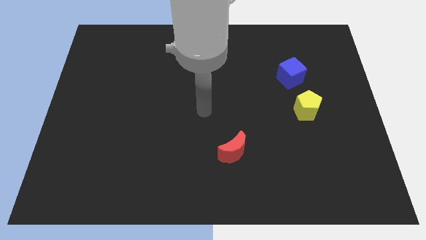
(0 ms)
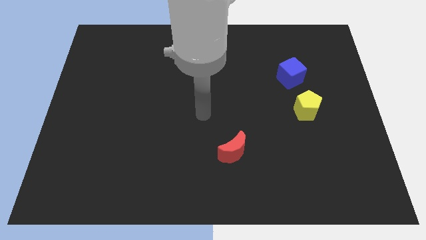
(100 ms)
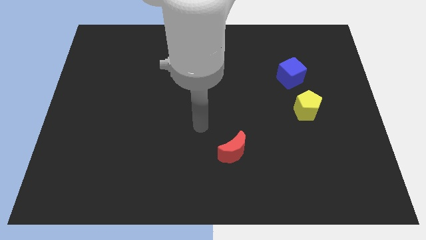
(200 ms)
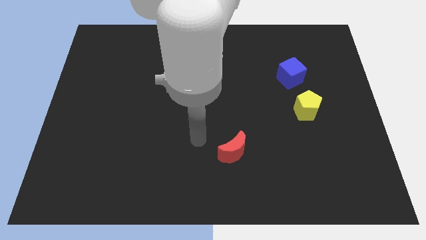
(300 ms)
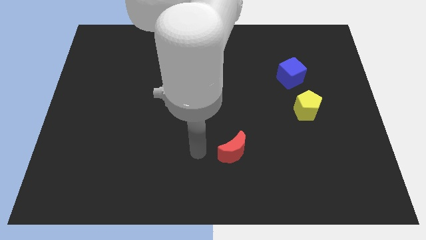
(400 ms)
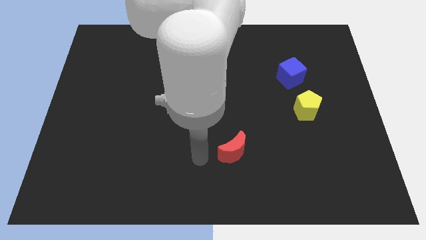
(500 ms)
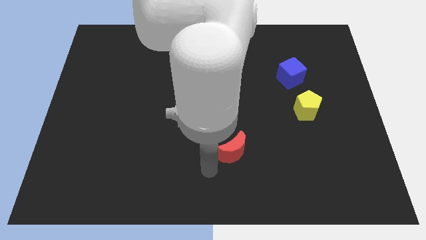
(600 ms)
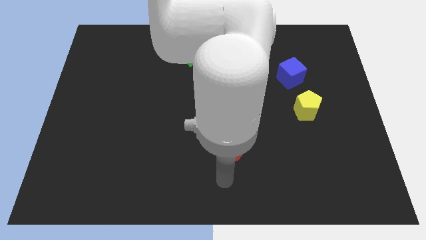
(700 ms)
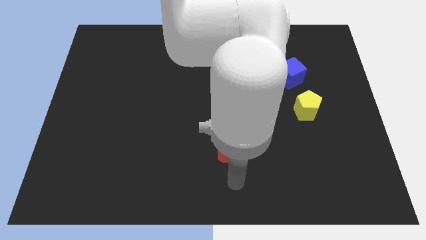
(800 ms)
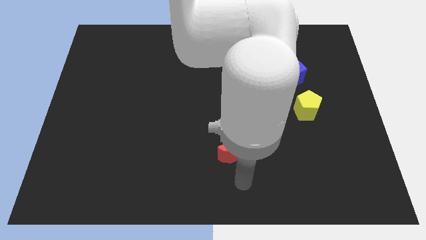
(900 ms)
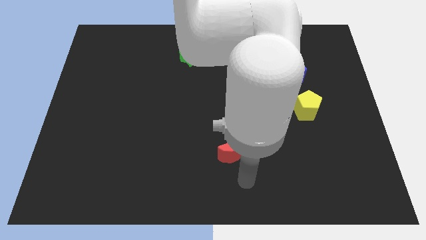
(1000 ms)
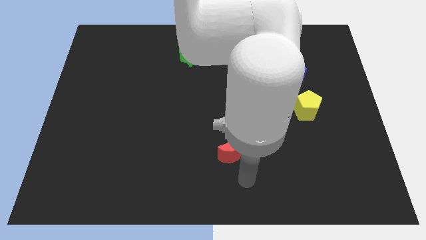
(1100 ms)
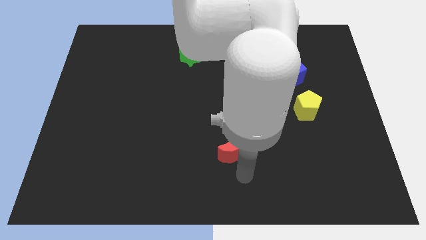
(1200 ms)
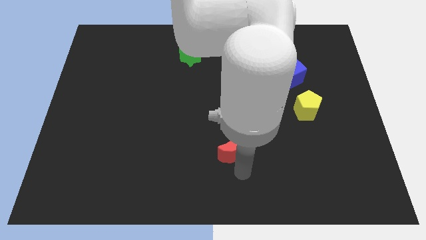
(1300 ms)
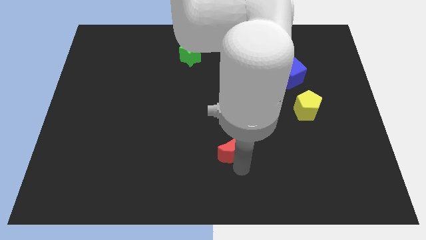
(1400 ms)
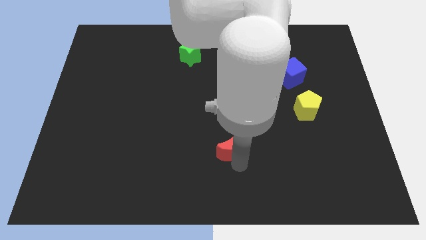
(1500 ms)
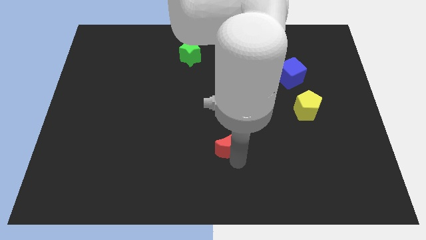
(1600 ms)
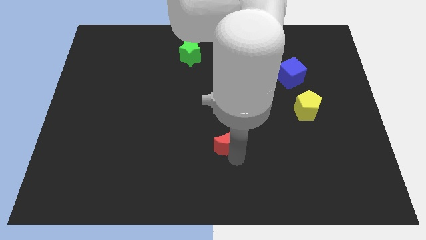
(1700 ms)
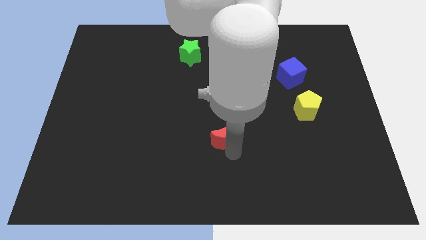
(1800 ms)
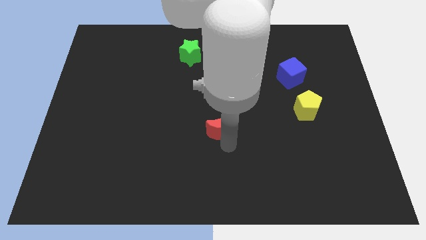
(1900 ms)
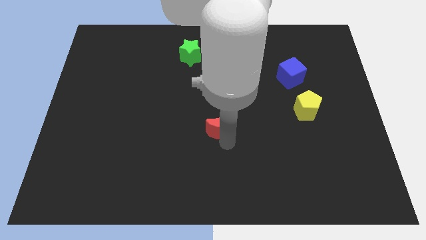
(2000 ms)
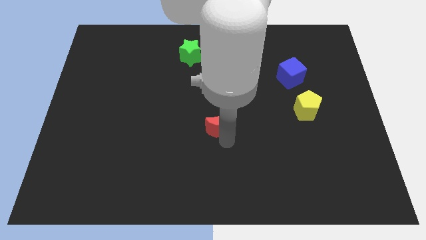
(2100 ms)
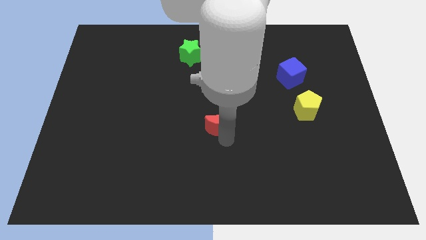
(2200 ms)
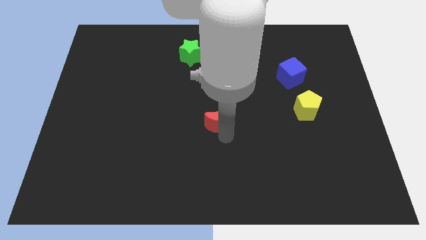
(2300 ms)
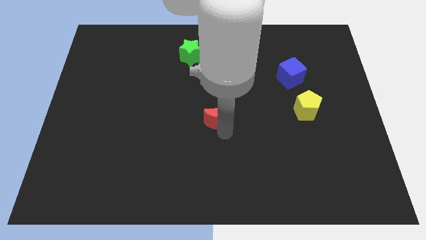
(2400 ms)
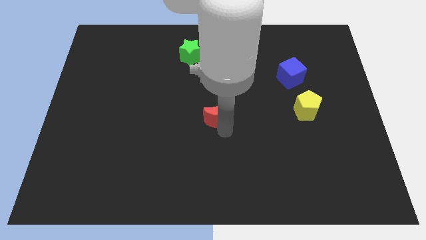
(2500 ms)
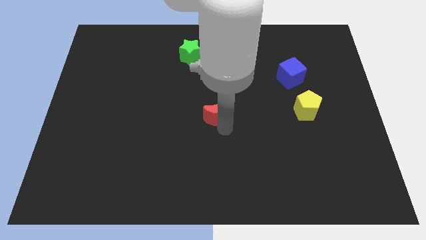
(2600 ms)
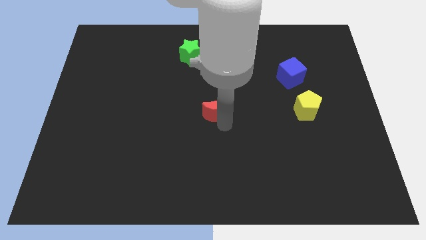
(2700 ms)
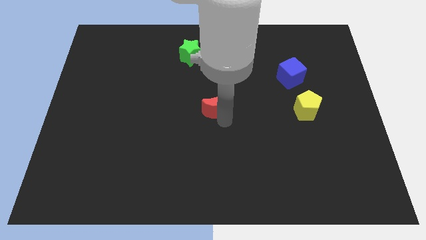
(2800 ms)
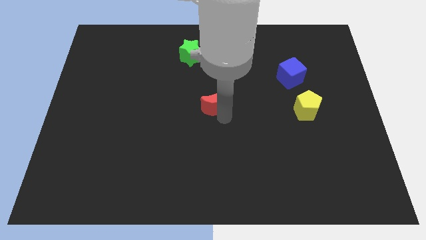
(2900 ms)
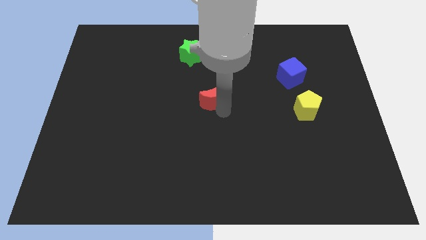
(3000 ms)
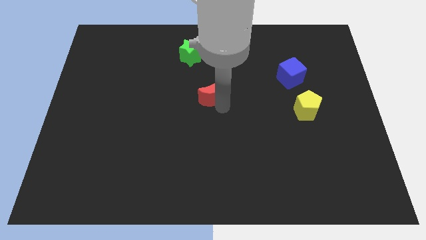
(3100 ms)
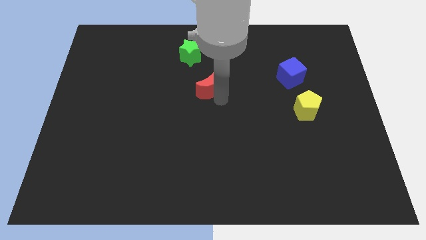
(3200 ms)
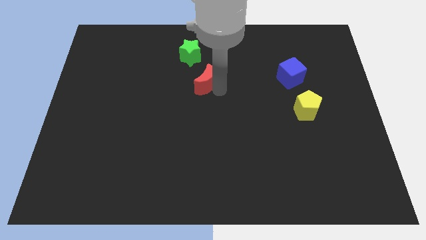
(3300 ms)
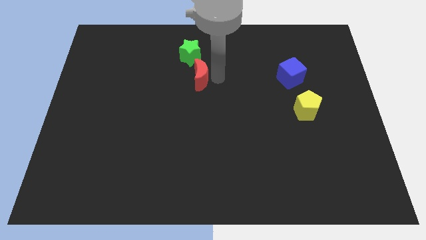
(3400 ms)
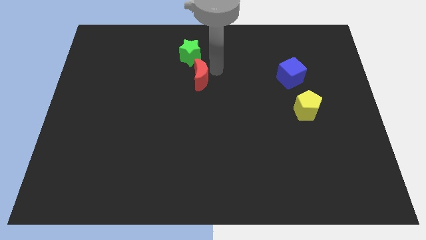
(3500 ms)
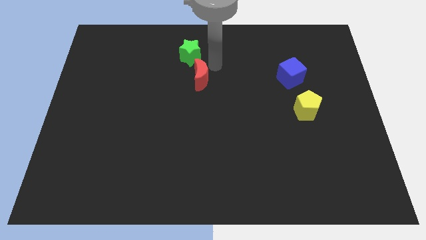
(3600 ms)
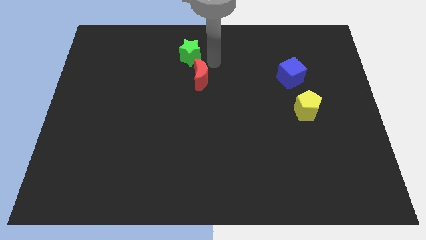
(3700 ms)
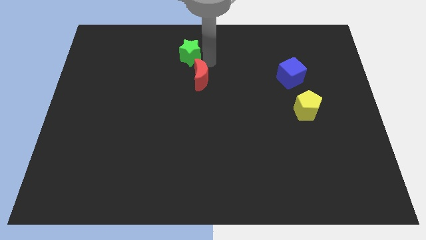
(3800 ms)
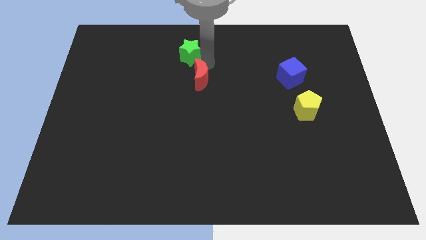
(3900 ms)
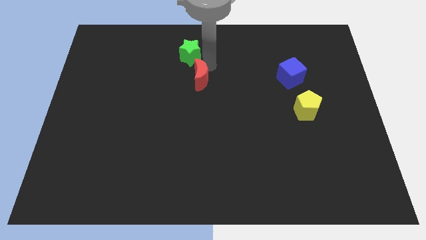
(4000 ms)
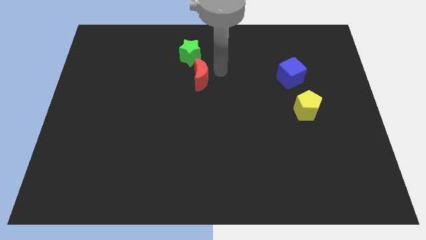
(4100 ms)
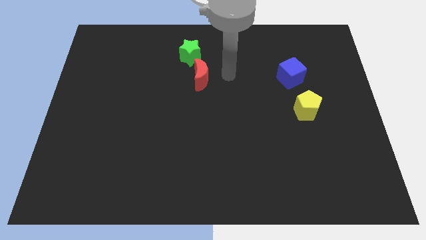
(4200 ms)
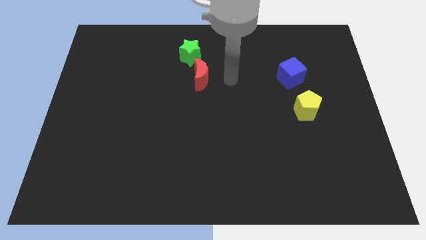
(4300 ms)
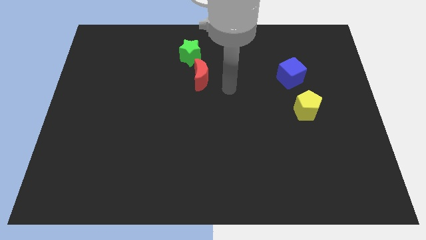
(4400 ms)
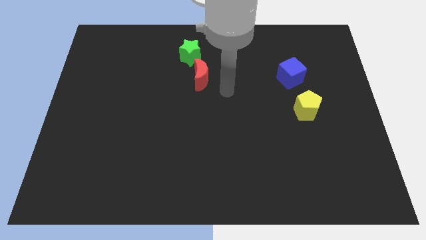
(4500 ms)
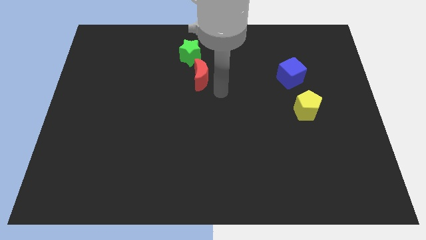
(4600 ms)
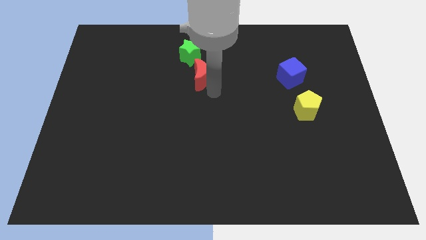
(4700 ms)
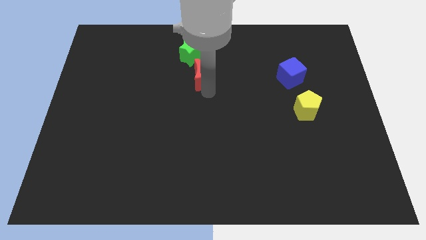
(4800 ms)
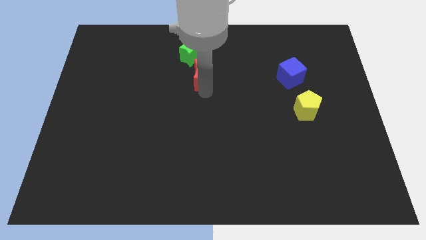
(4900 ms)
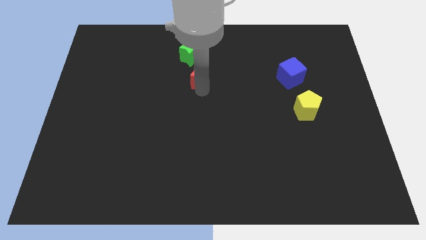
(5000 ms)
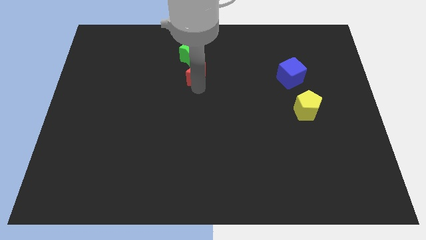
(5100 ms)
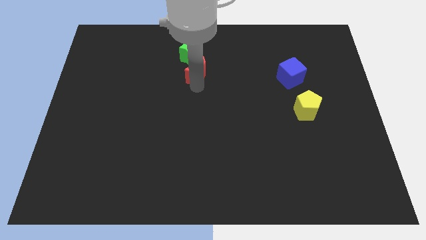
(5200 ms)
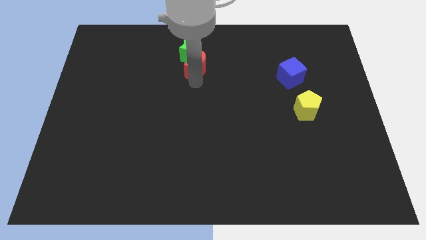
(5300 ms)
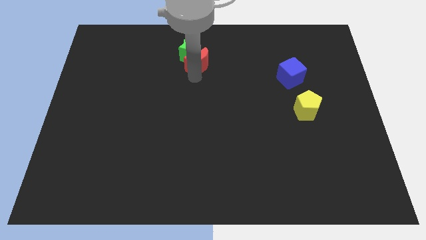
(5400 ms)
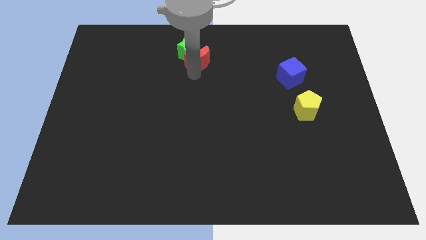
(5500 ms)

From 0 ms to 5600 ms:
push the moon towards the green block

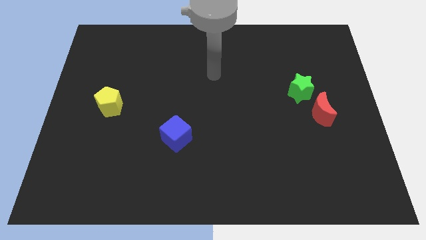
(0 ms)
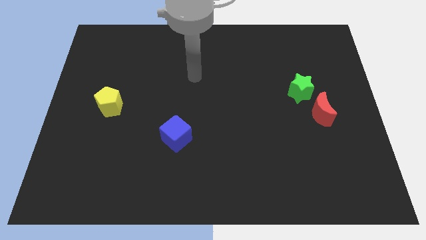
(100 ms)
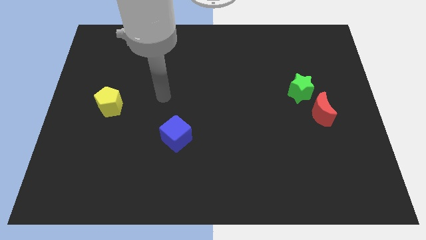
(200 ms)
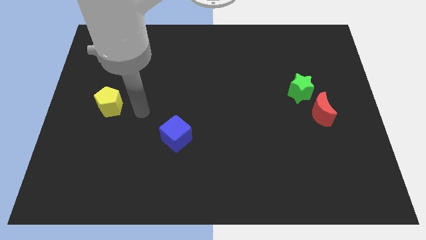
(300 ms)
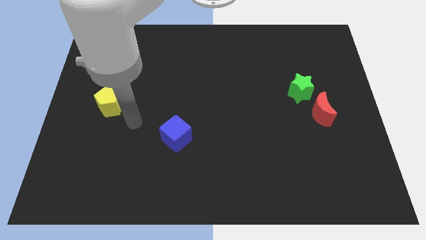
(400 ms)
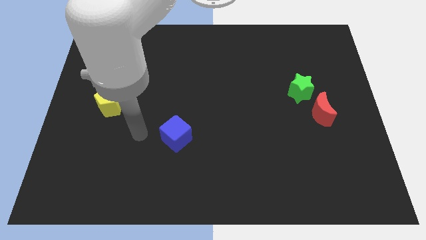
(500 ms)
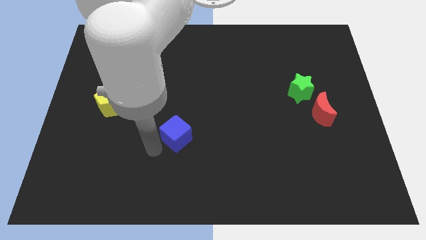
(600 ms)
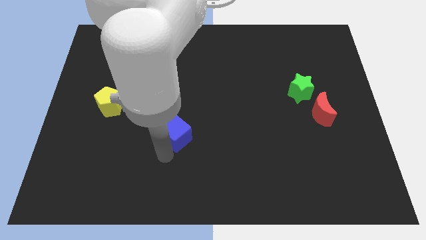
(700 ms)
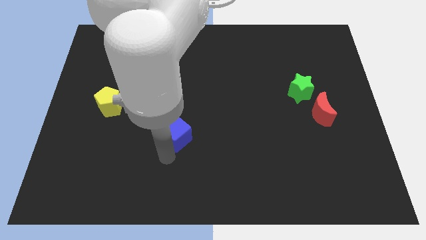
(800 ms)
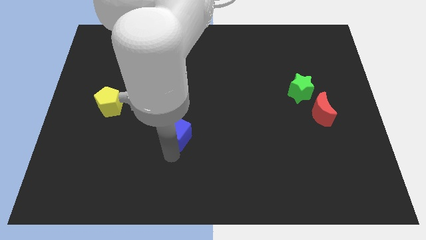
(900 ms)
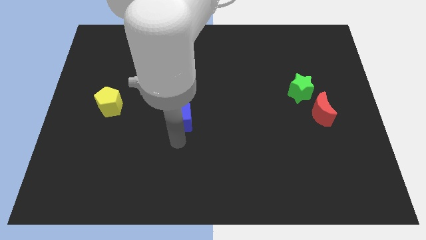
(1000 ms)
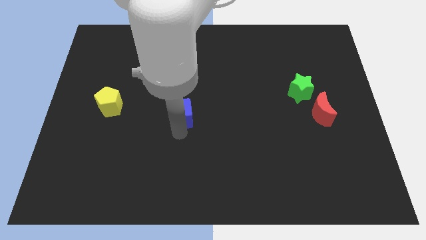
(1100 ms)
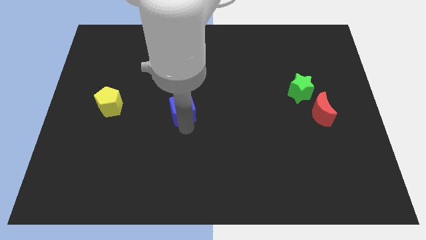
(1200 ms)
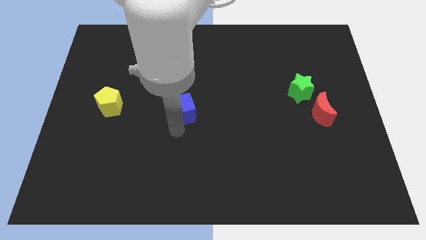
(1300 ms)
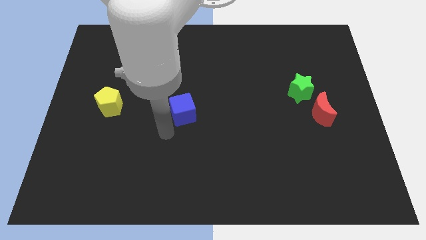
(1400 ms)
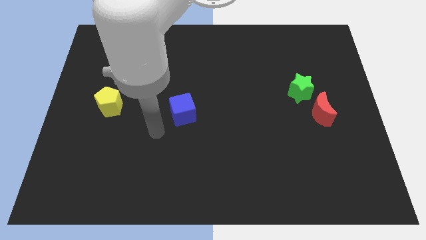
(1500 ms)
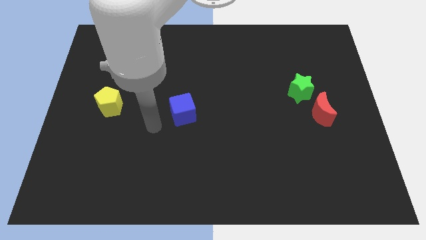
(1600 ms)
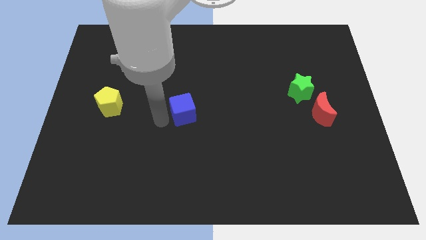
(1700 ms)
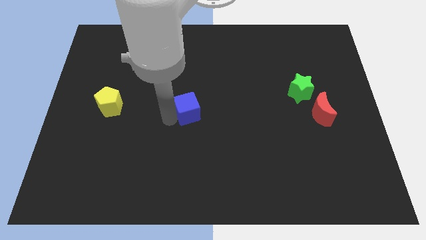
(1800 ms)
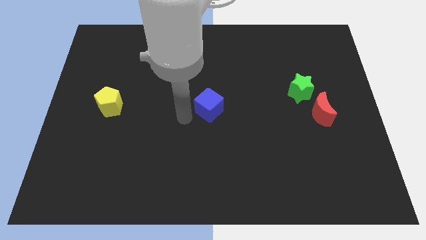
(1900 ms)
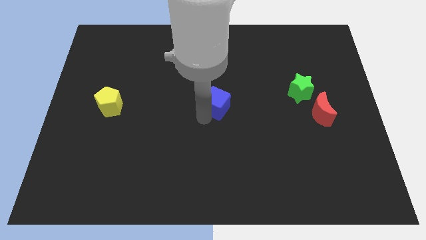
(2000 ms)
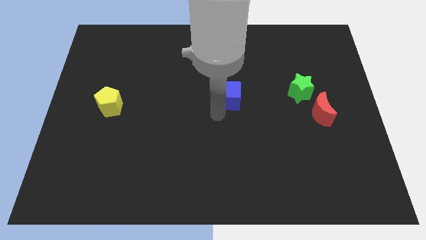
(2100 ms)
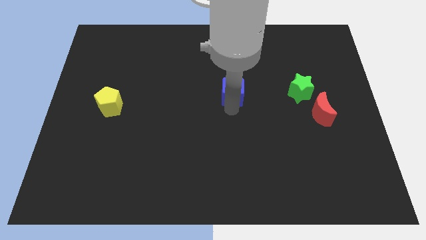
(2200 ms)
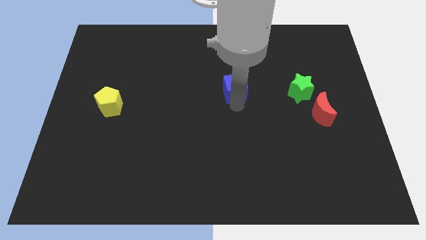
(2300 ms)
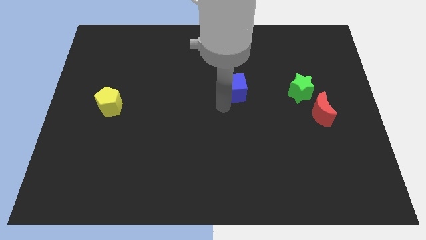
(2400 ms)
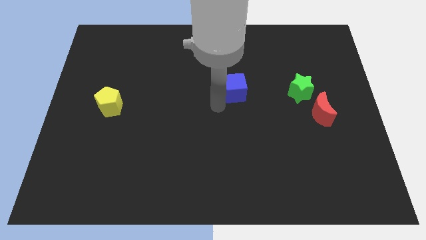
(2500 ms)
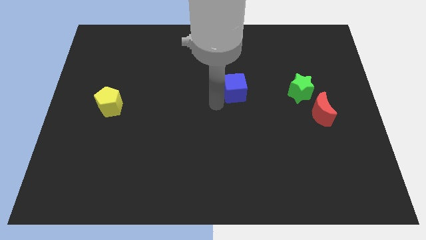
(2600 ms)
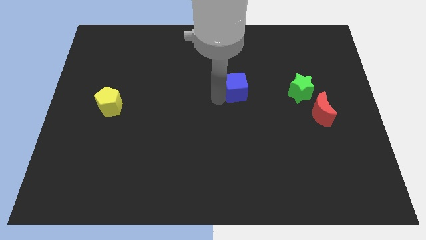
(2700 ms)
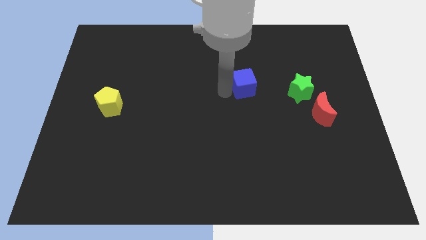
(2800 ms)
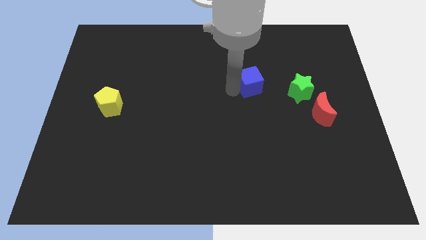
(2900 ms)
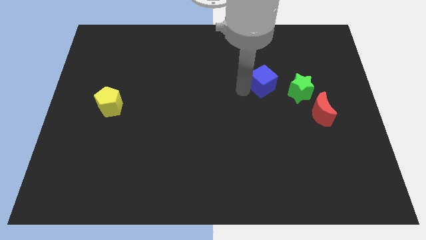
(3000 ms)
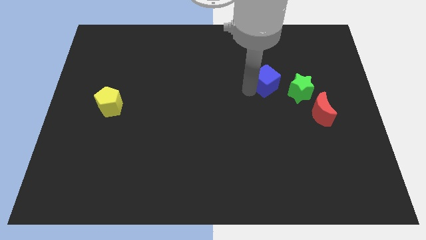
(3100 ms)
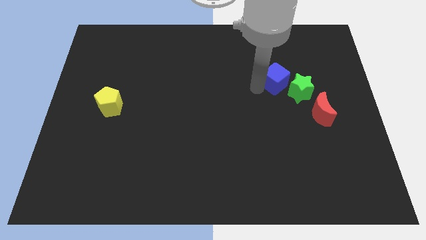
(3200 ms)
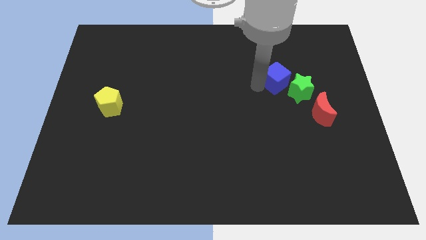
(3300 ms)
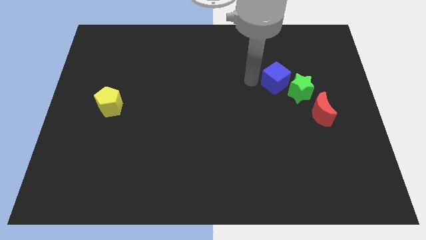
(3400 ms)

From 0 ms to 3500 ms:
slide the blue cube next to the green block
